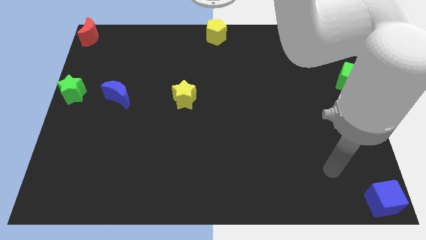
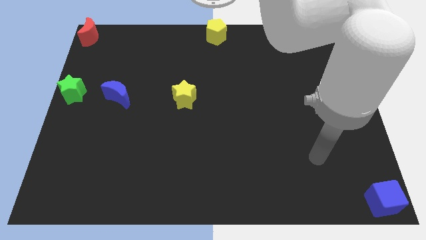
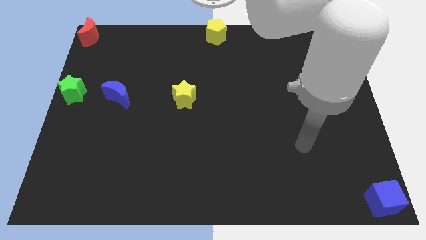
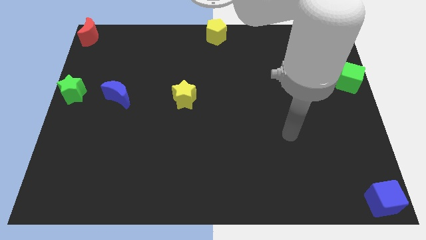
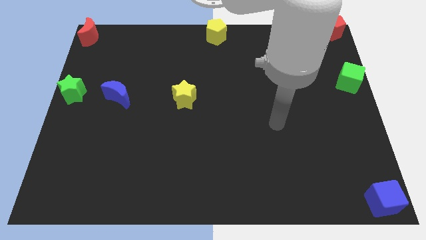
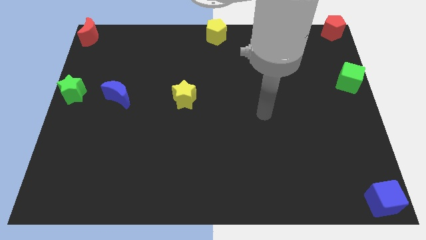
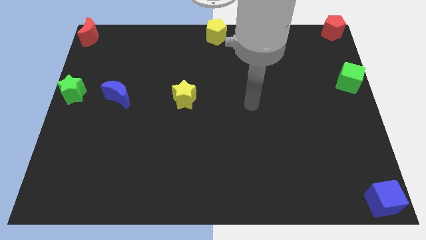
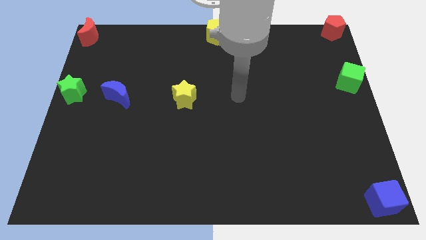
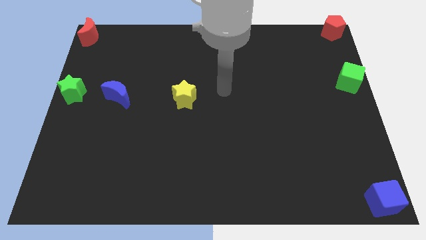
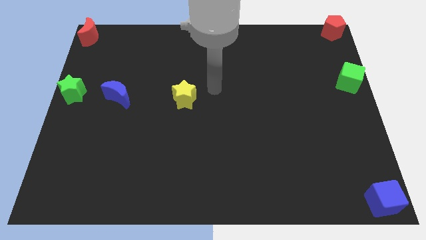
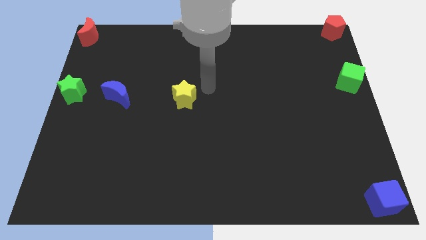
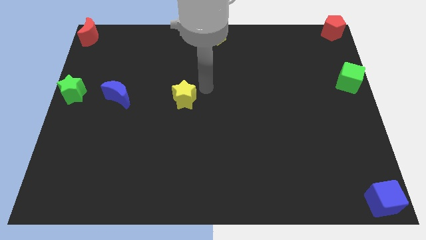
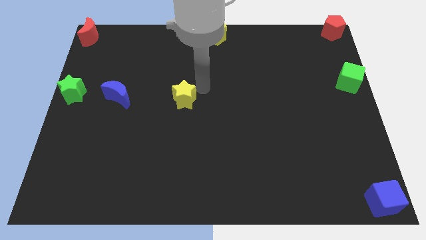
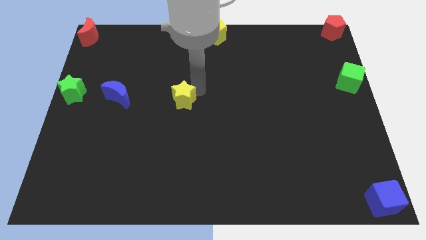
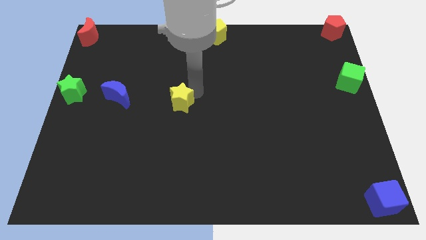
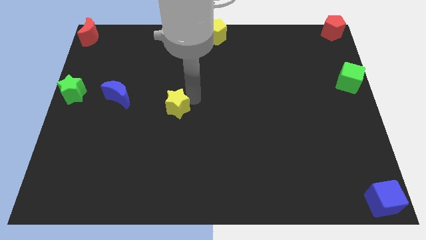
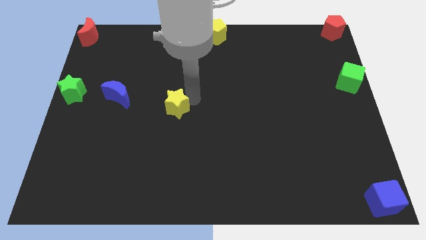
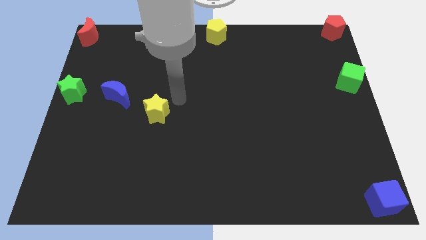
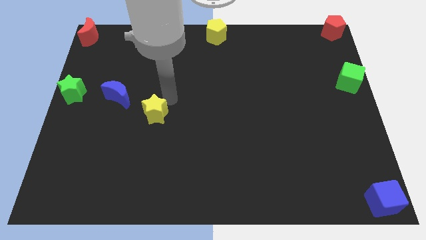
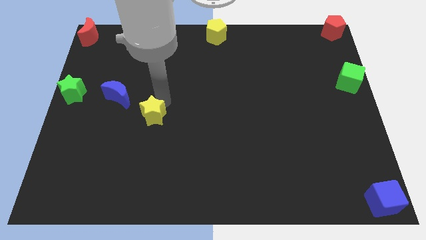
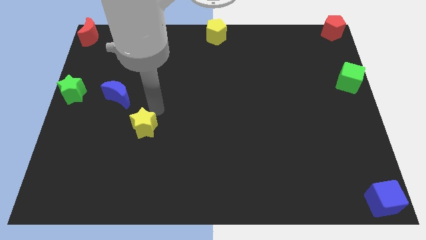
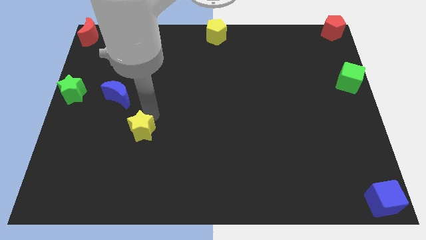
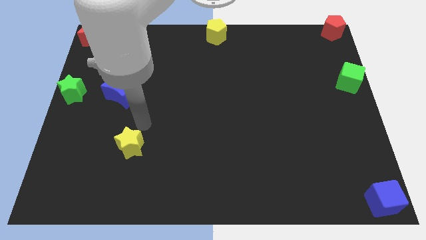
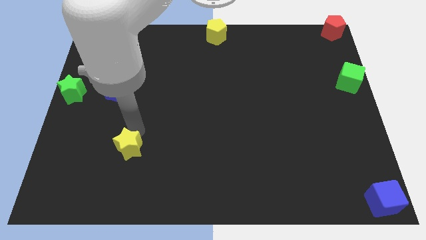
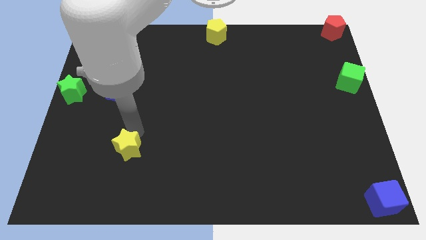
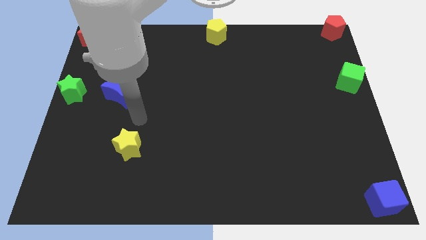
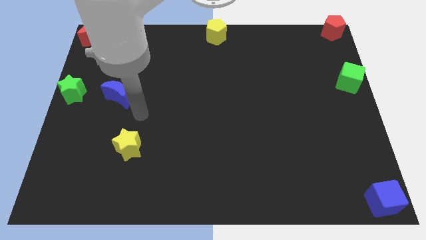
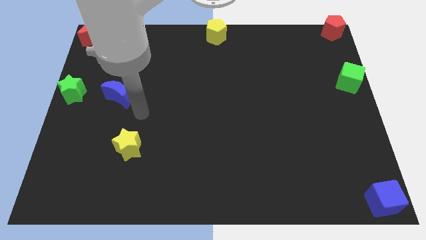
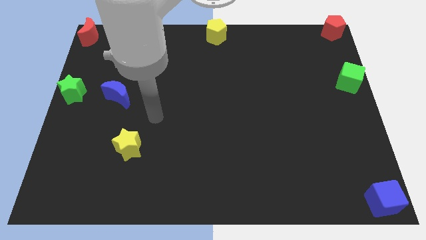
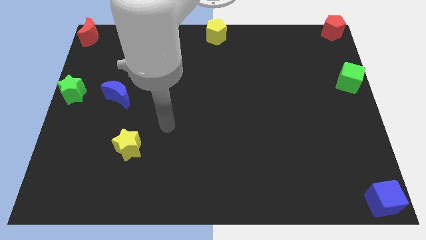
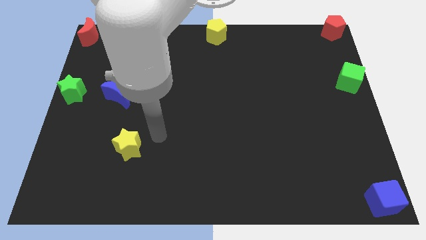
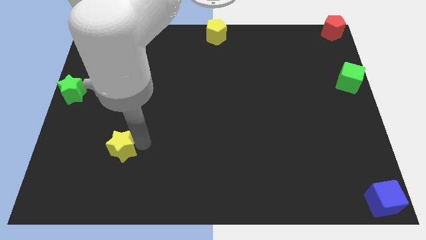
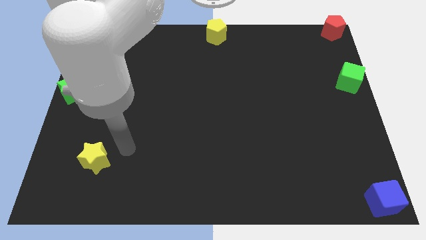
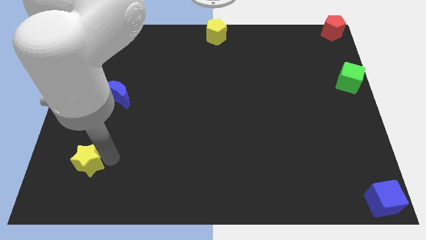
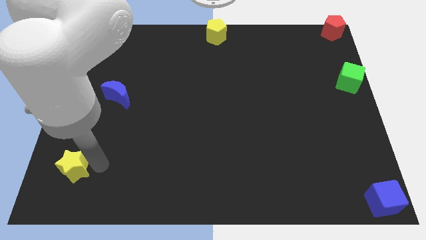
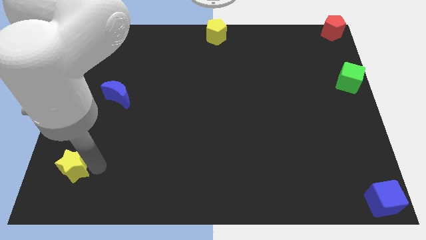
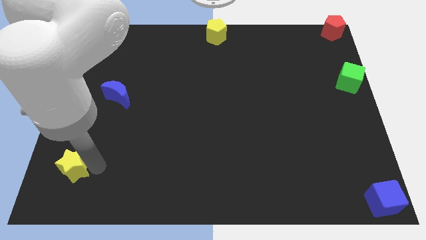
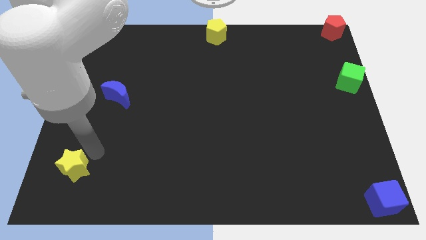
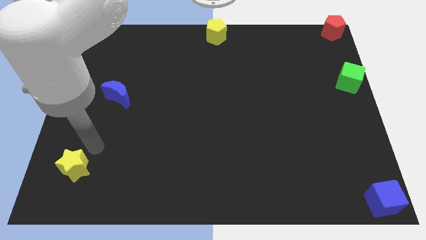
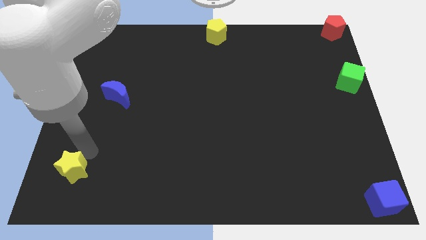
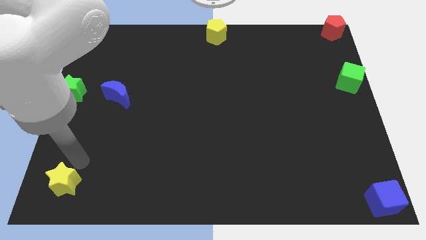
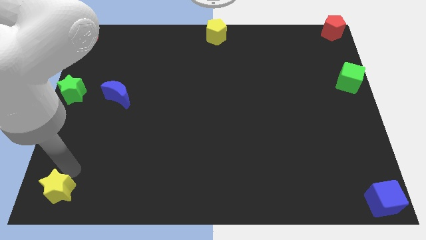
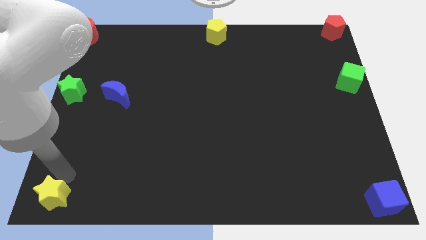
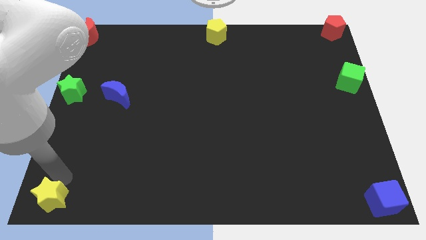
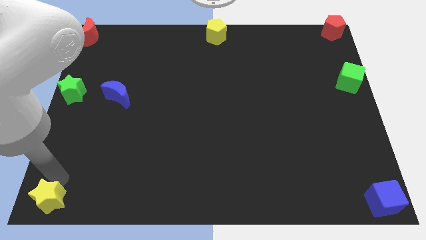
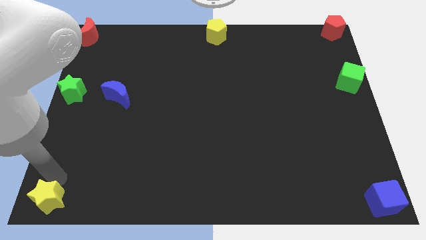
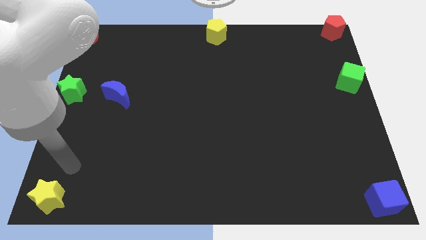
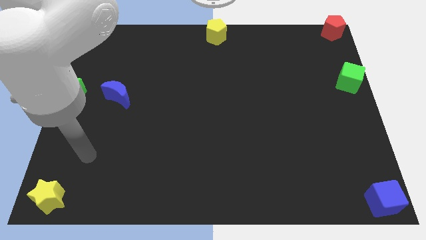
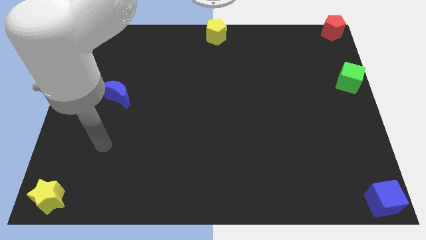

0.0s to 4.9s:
push the yellow star towards the bottom left of the board

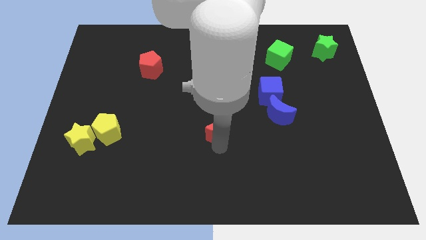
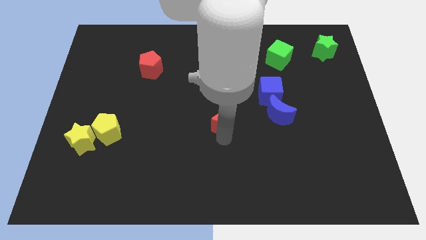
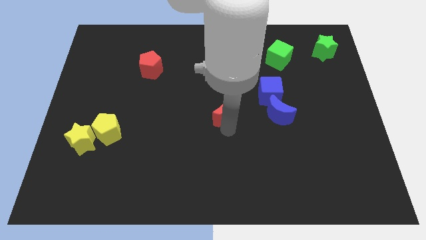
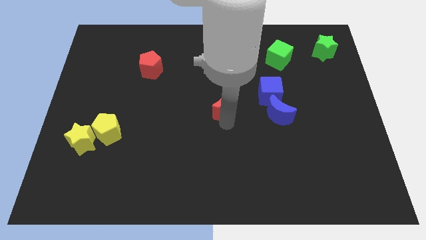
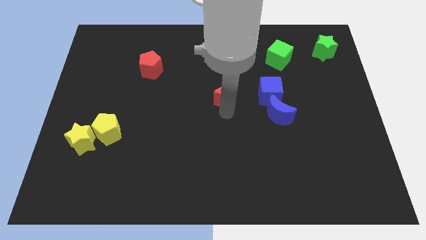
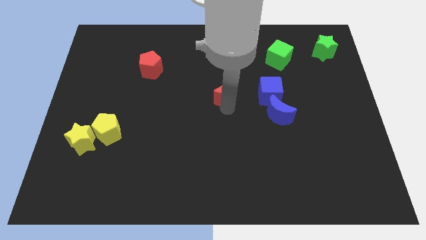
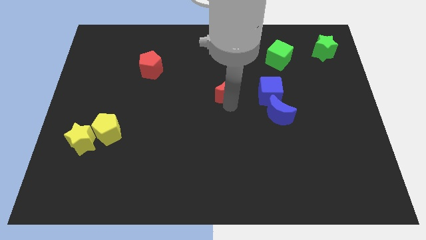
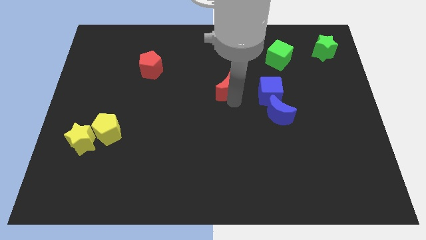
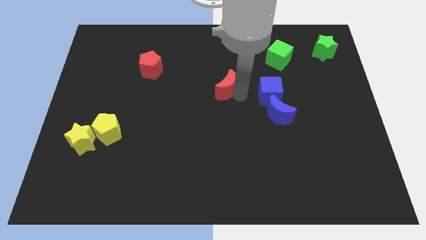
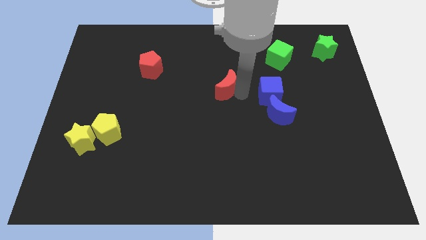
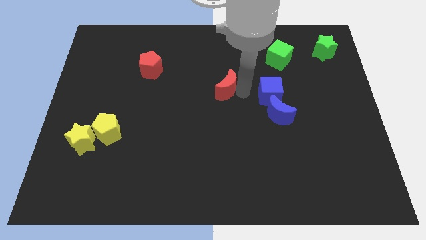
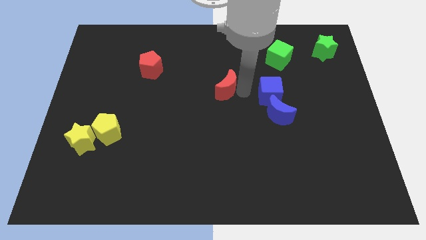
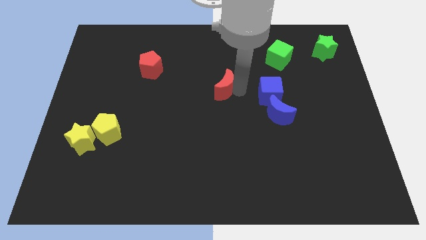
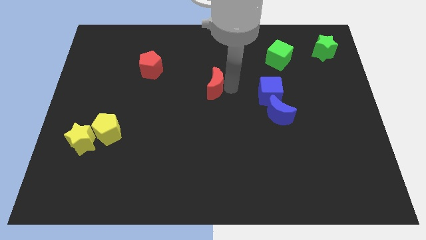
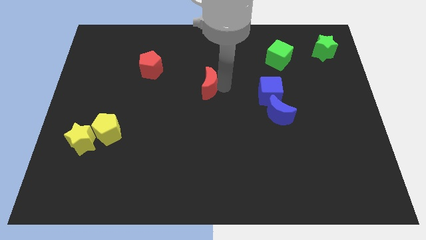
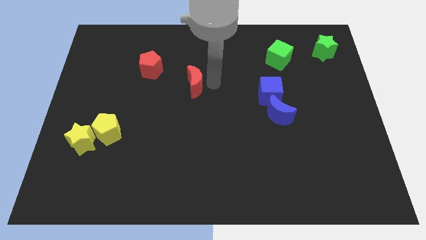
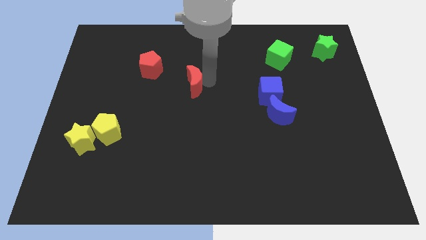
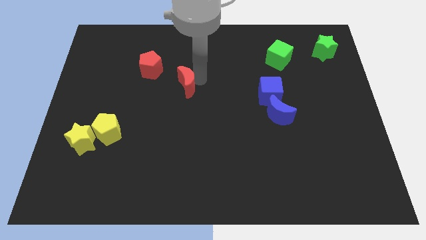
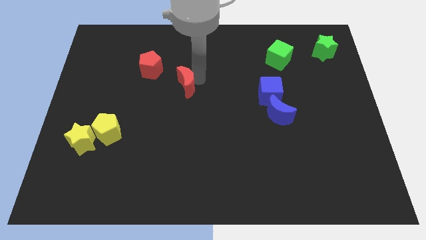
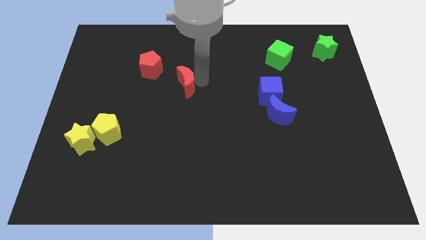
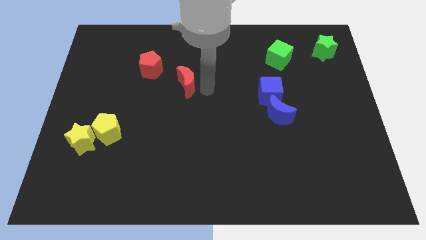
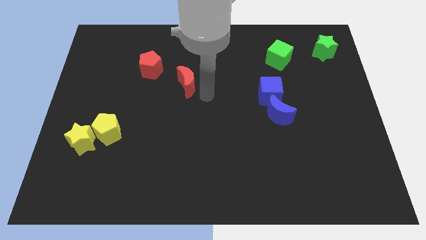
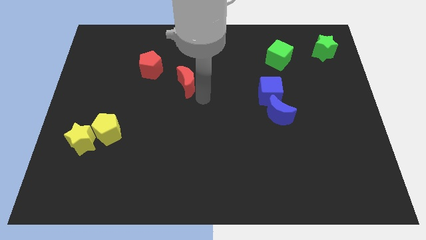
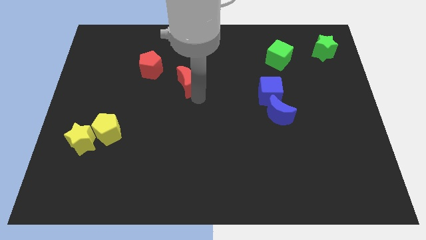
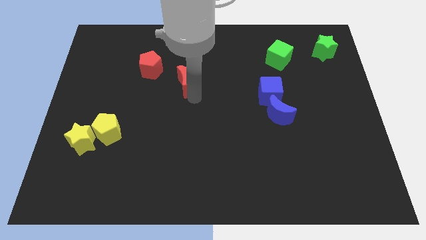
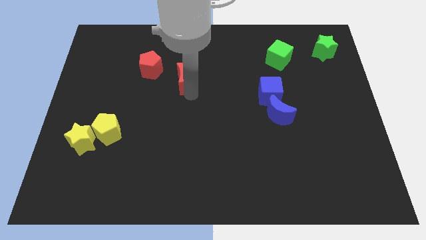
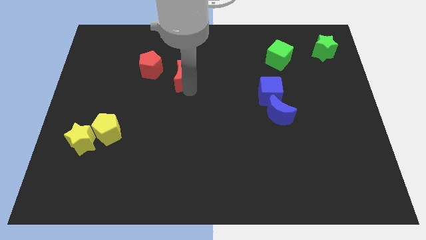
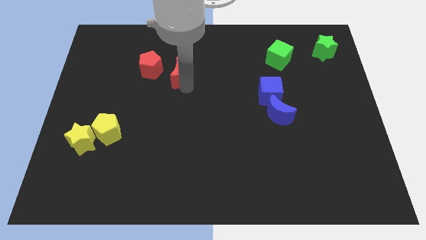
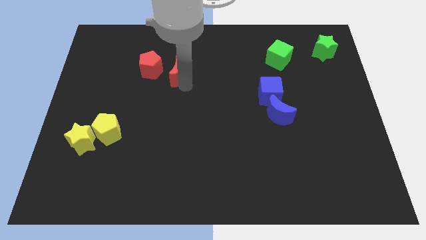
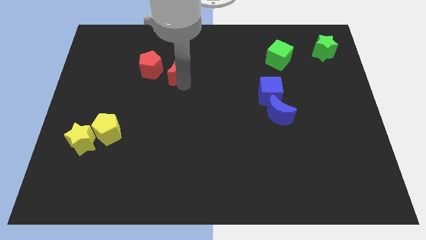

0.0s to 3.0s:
push the red crescent to the right of the red pentagon

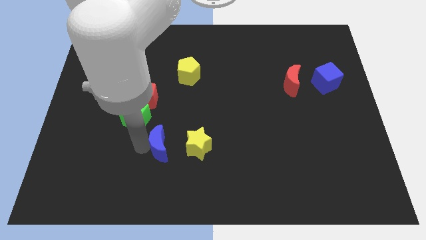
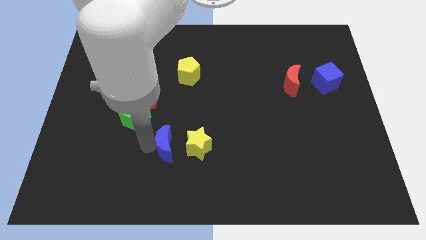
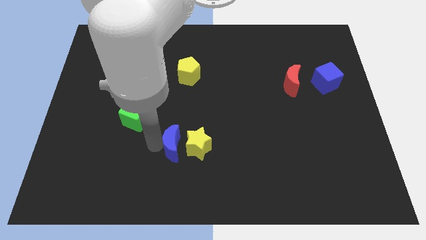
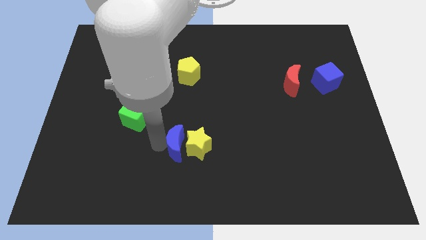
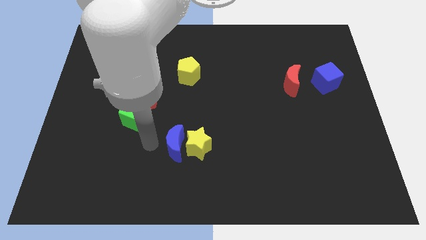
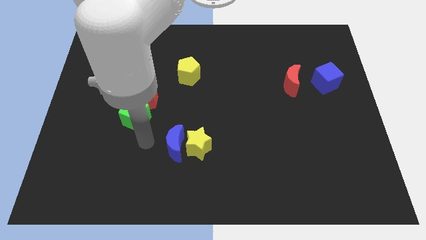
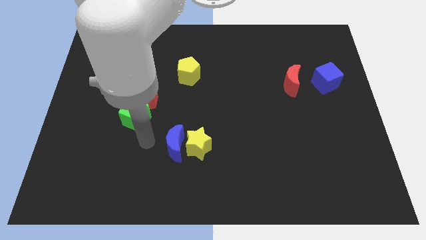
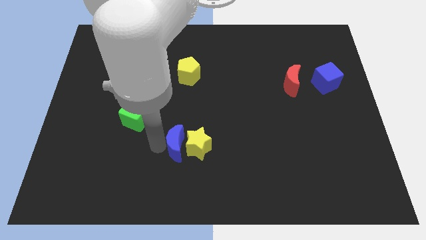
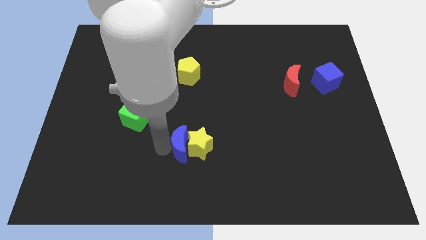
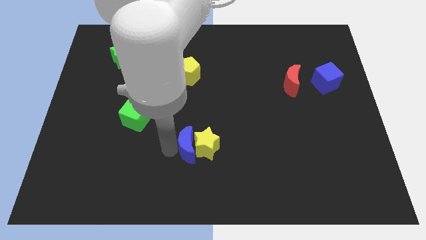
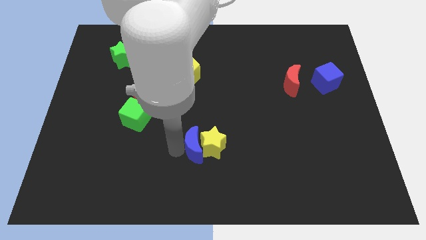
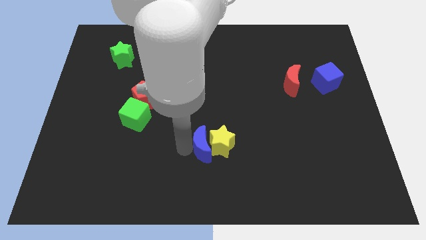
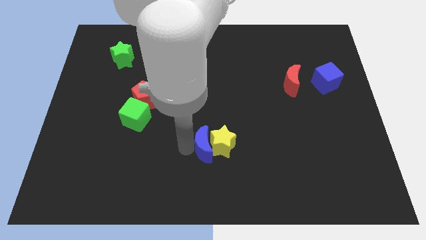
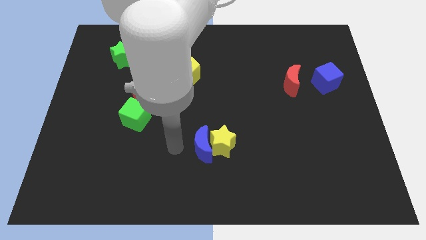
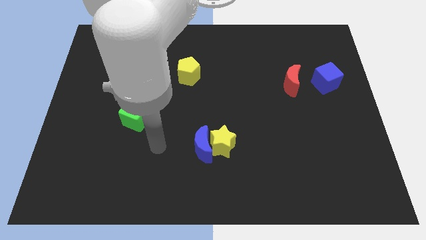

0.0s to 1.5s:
put the blue moon into the yellow star
